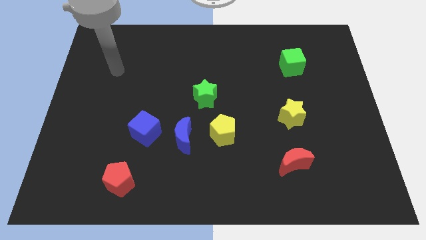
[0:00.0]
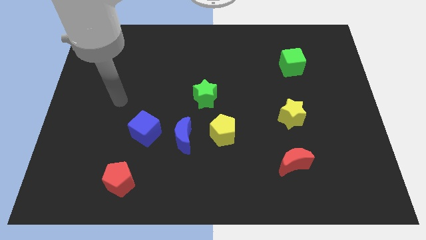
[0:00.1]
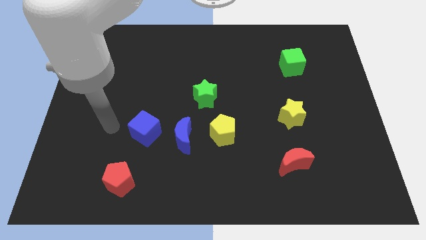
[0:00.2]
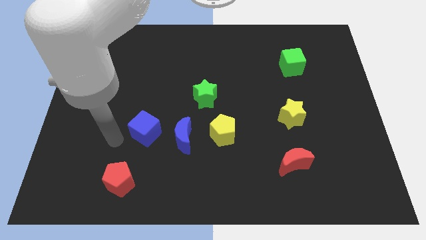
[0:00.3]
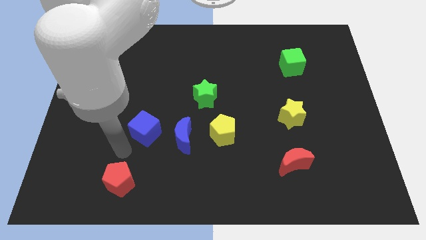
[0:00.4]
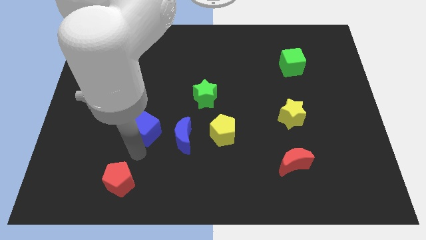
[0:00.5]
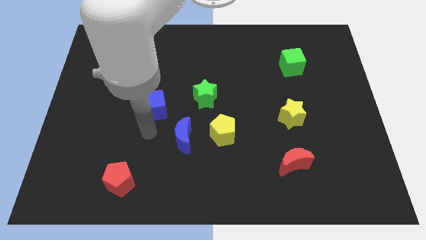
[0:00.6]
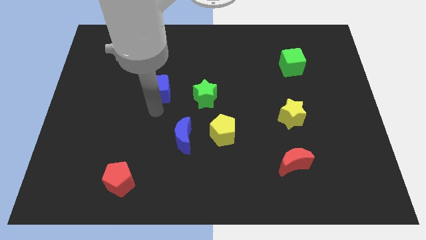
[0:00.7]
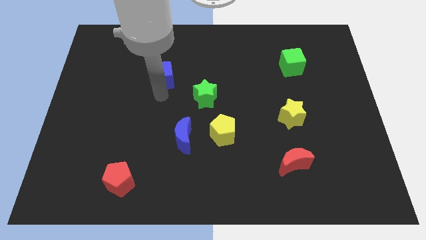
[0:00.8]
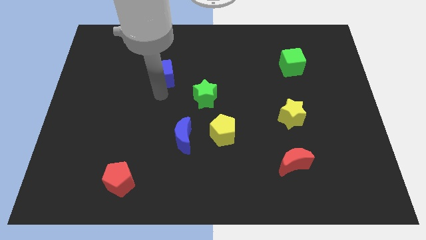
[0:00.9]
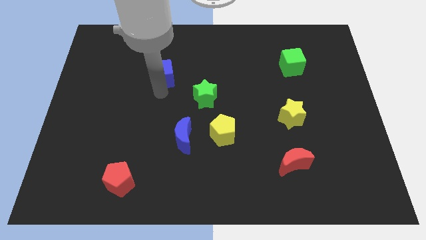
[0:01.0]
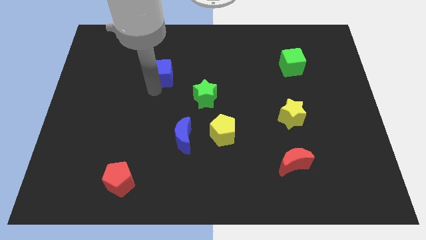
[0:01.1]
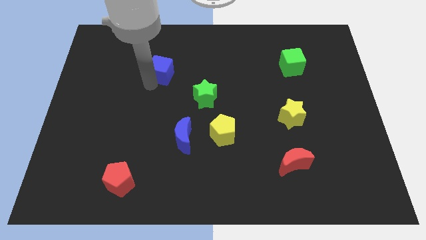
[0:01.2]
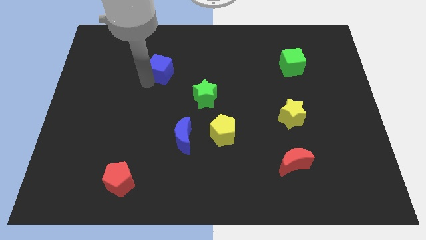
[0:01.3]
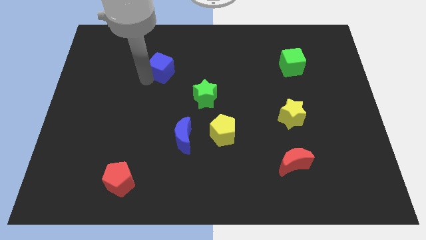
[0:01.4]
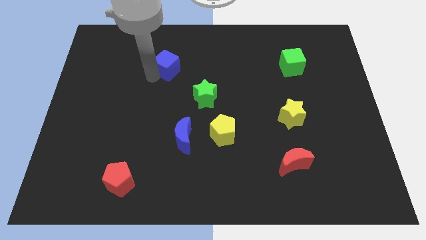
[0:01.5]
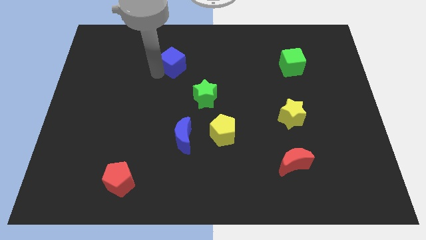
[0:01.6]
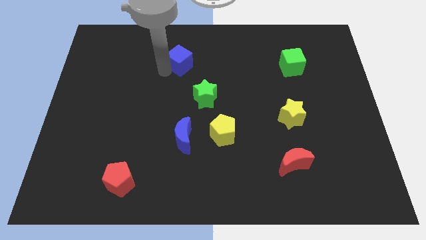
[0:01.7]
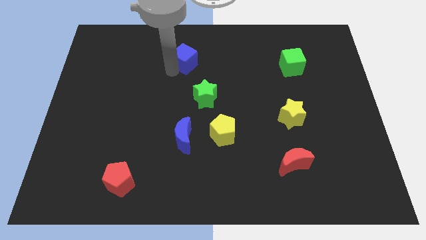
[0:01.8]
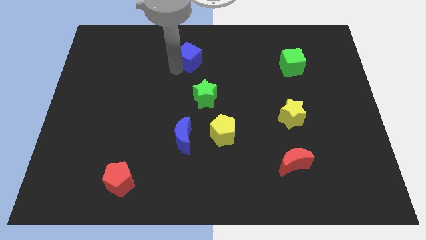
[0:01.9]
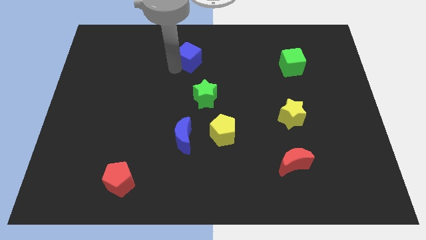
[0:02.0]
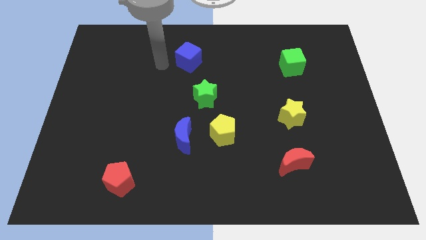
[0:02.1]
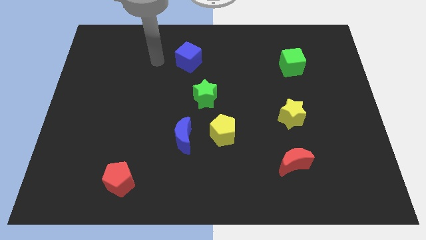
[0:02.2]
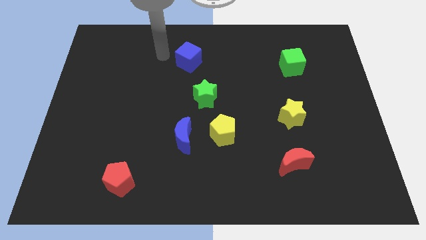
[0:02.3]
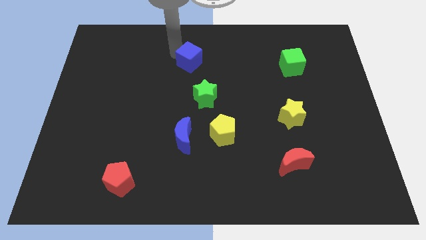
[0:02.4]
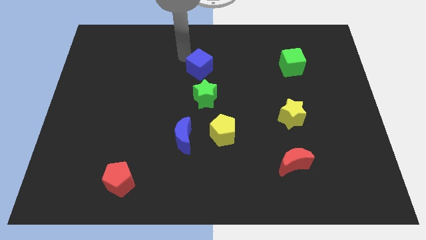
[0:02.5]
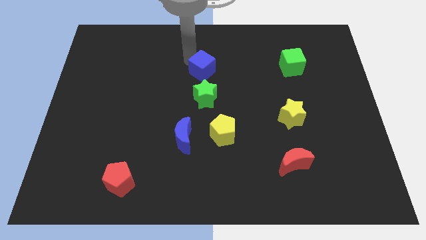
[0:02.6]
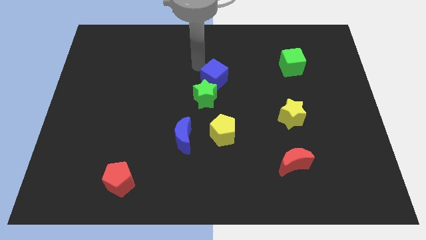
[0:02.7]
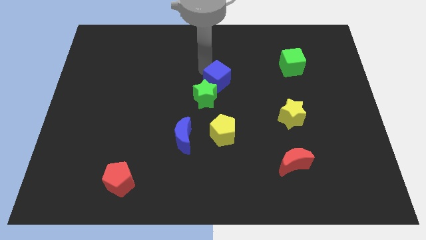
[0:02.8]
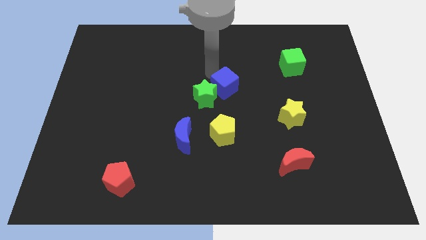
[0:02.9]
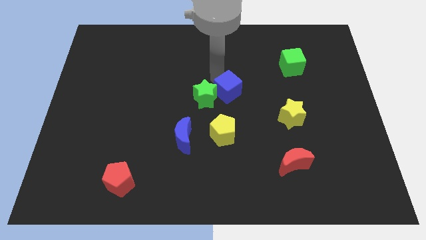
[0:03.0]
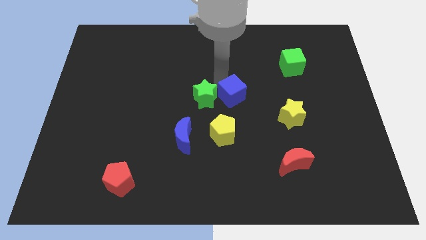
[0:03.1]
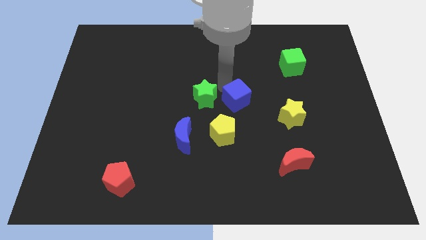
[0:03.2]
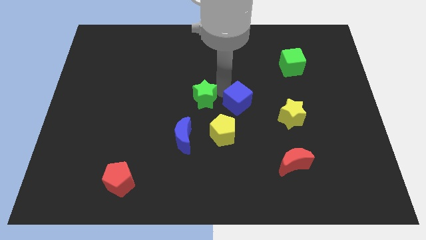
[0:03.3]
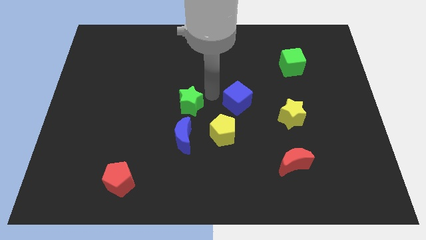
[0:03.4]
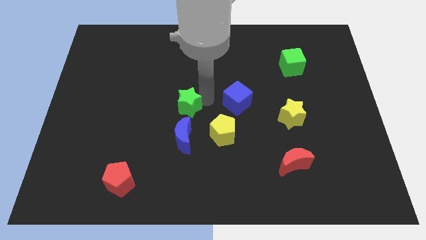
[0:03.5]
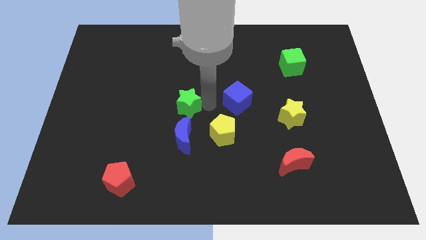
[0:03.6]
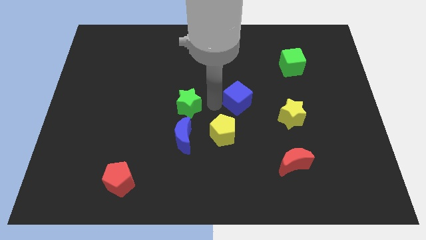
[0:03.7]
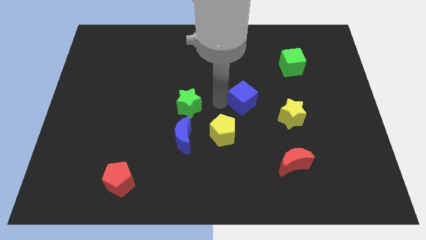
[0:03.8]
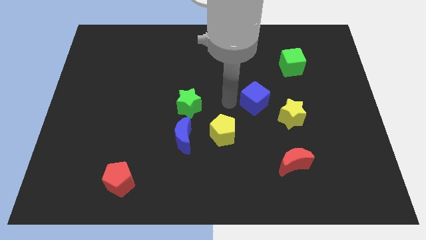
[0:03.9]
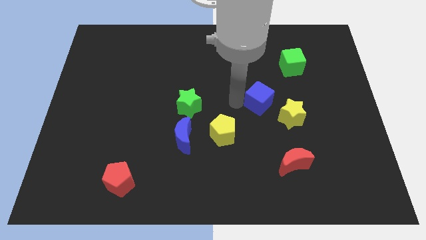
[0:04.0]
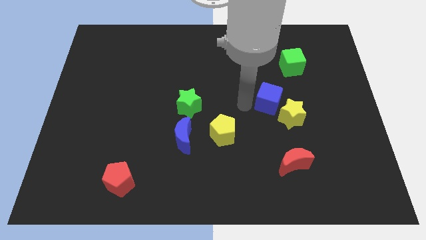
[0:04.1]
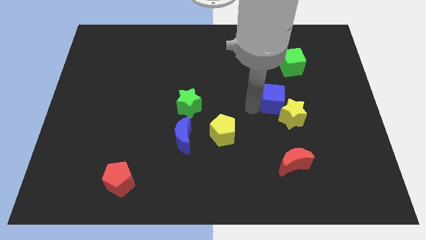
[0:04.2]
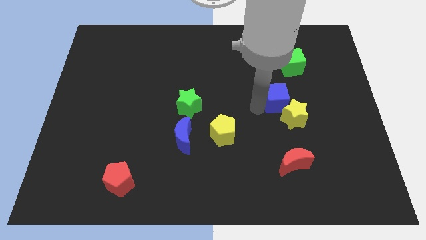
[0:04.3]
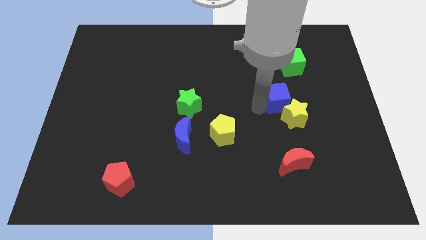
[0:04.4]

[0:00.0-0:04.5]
push the blue cube to the yellow star

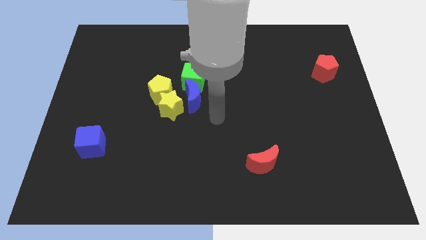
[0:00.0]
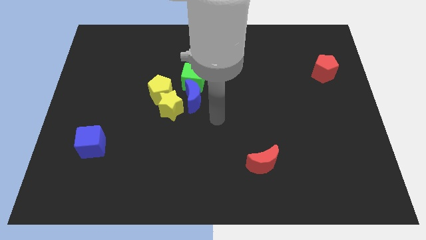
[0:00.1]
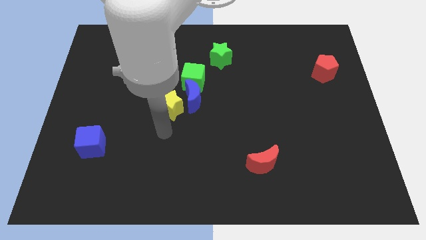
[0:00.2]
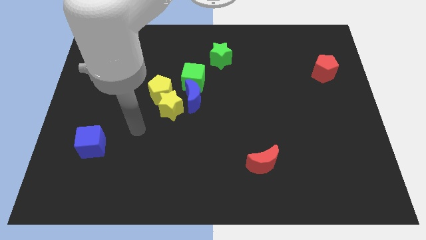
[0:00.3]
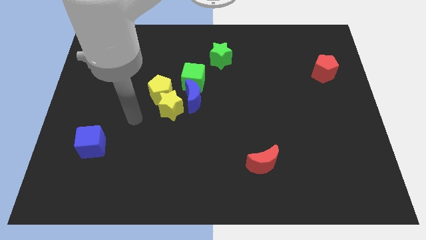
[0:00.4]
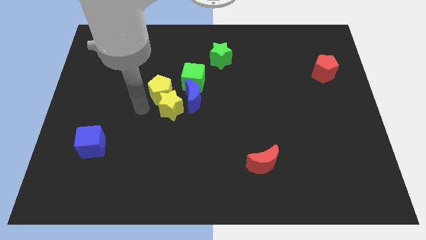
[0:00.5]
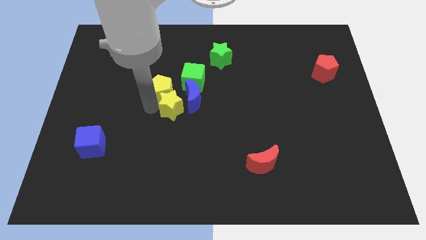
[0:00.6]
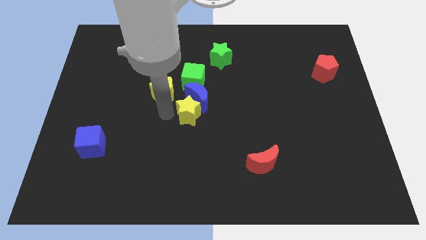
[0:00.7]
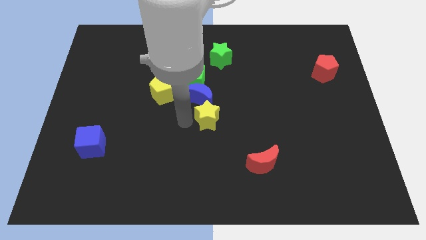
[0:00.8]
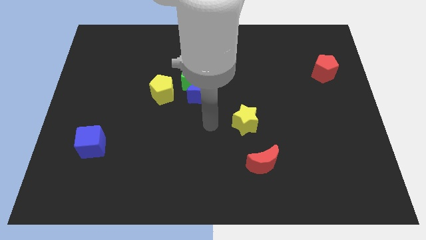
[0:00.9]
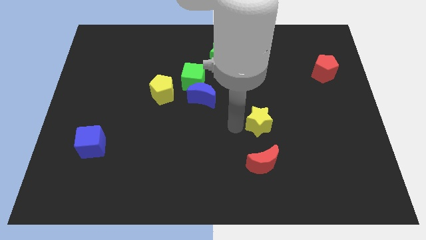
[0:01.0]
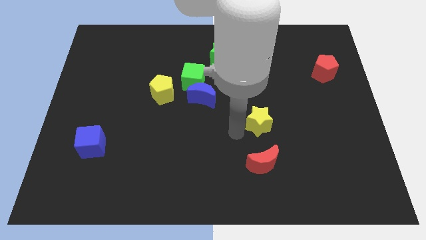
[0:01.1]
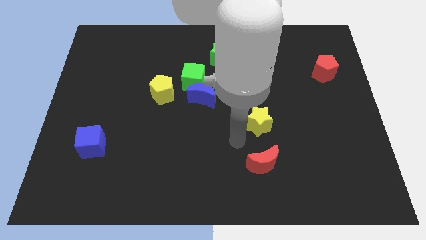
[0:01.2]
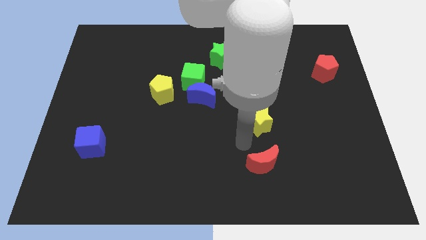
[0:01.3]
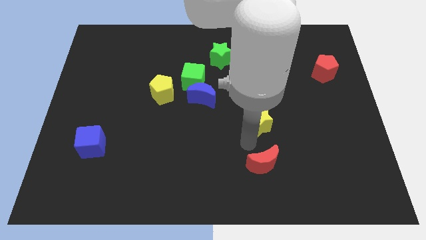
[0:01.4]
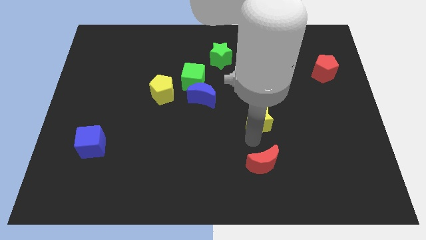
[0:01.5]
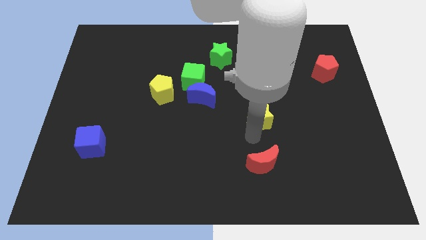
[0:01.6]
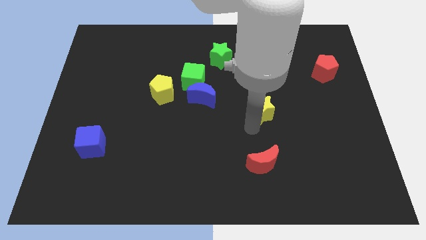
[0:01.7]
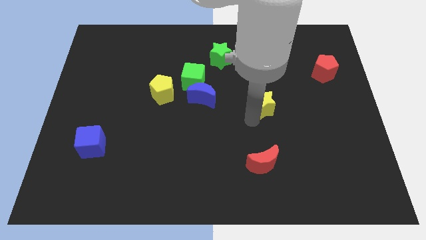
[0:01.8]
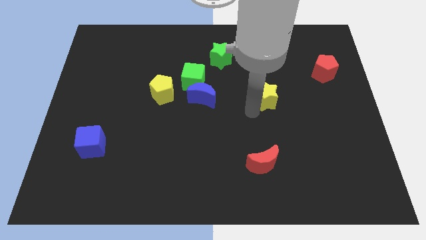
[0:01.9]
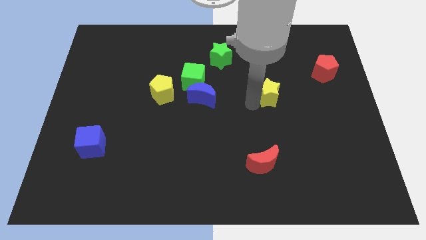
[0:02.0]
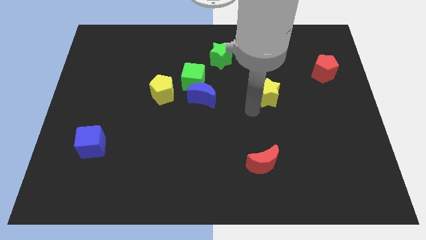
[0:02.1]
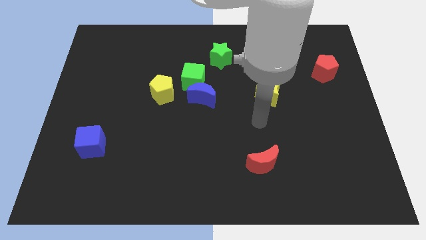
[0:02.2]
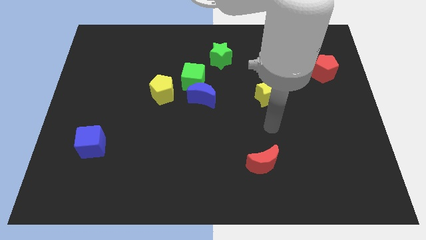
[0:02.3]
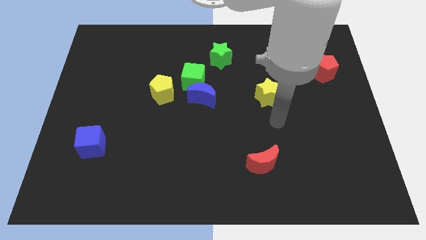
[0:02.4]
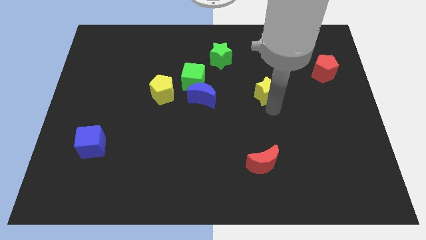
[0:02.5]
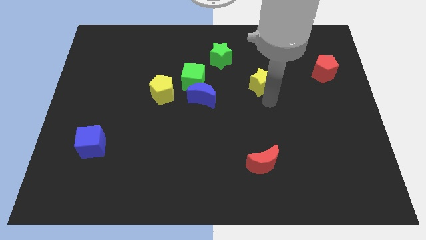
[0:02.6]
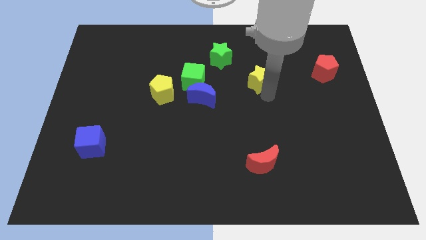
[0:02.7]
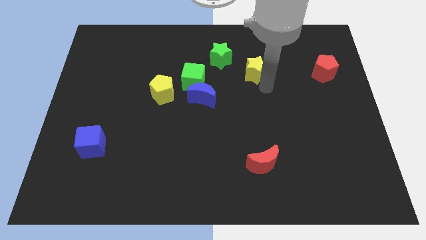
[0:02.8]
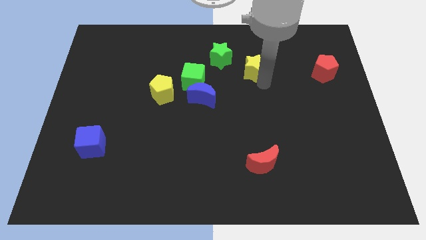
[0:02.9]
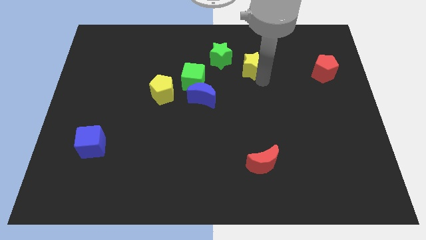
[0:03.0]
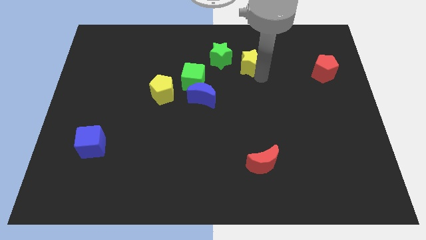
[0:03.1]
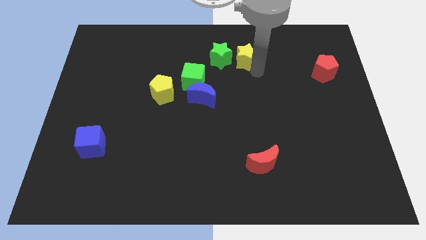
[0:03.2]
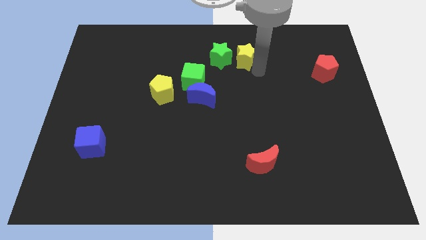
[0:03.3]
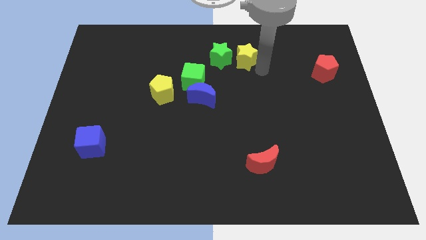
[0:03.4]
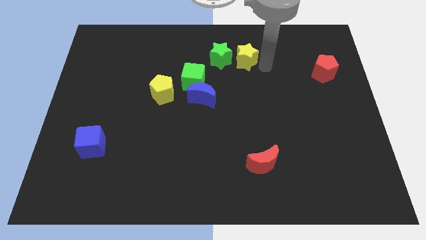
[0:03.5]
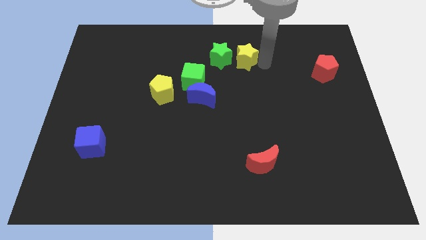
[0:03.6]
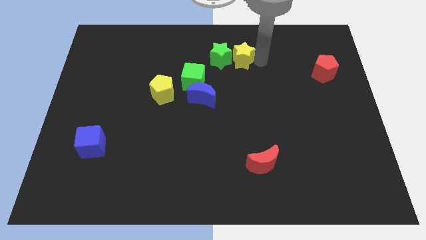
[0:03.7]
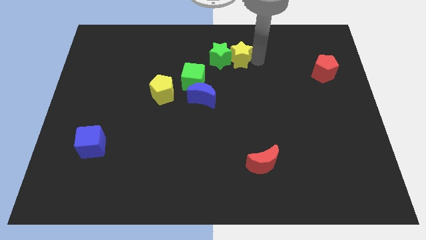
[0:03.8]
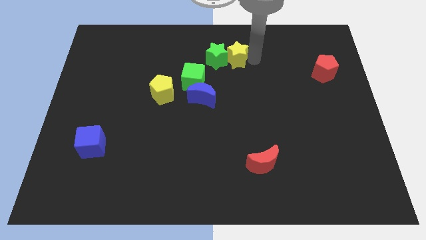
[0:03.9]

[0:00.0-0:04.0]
put the yellow star towards the green star

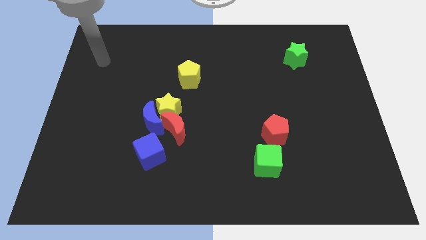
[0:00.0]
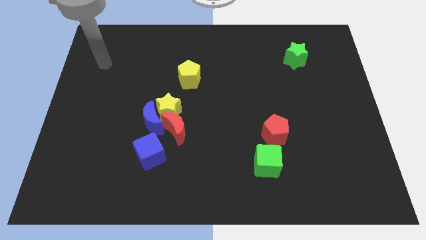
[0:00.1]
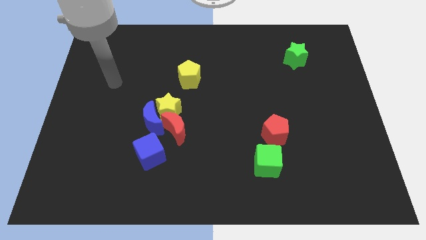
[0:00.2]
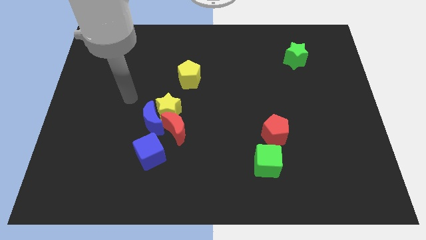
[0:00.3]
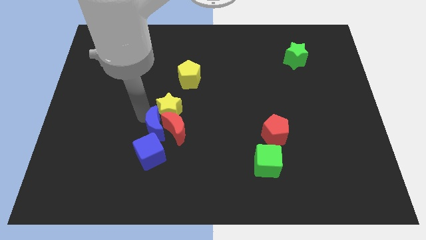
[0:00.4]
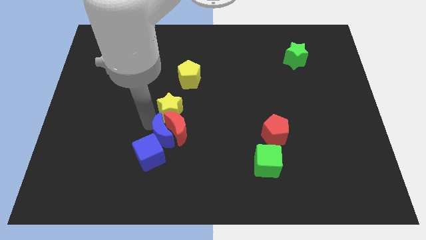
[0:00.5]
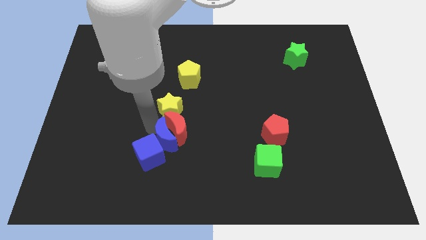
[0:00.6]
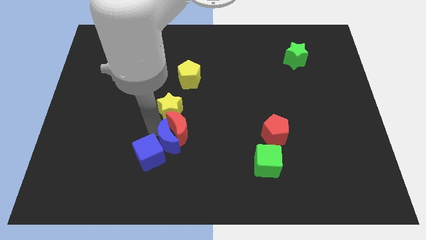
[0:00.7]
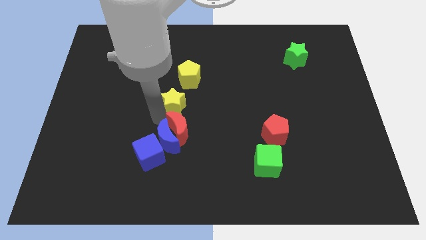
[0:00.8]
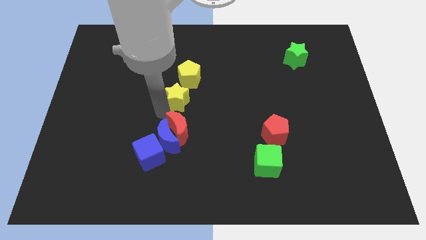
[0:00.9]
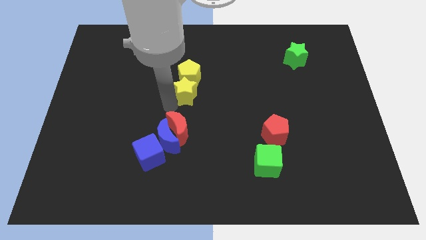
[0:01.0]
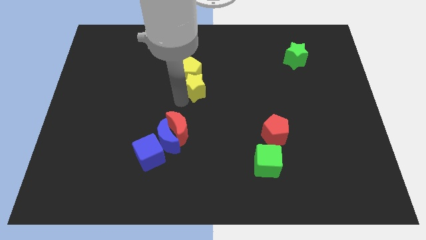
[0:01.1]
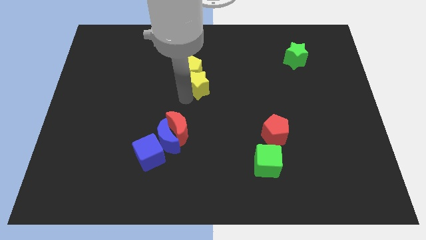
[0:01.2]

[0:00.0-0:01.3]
slide the yellow star towards the yellow pentagon
